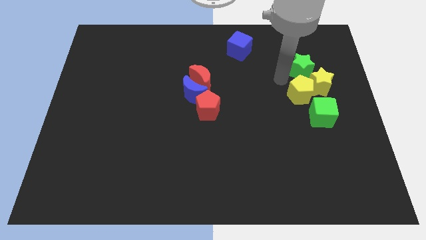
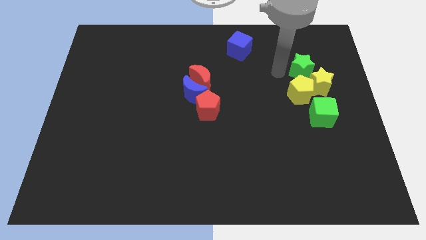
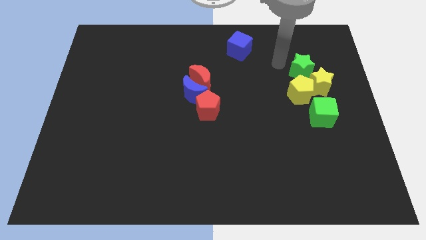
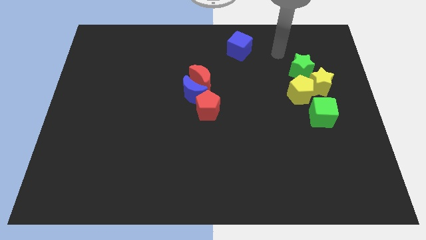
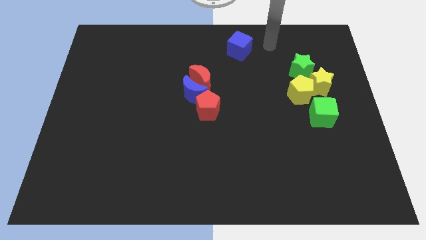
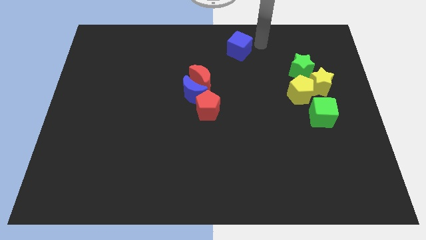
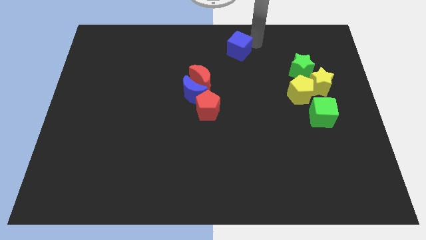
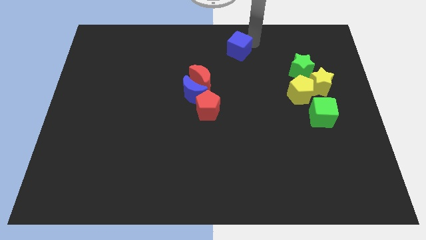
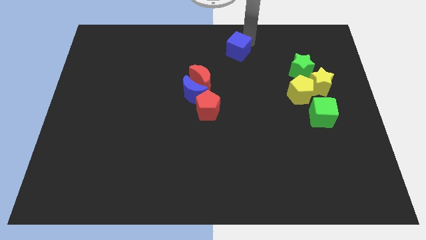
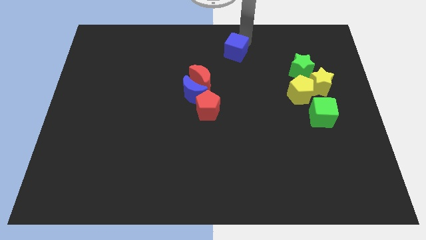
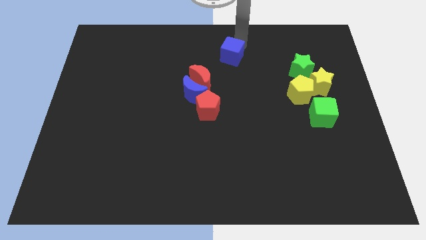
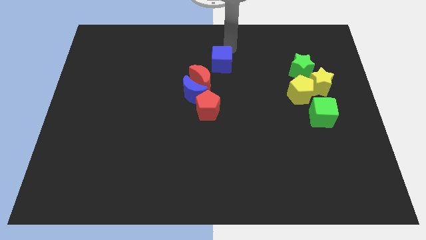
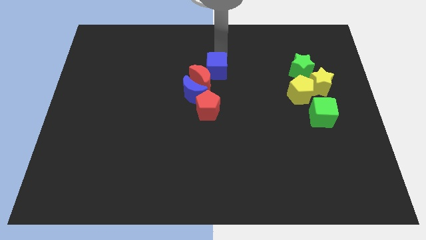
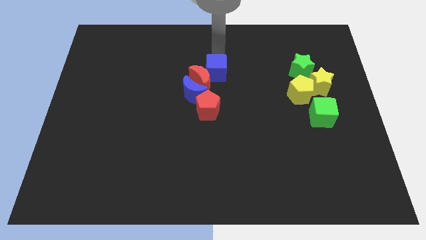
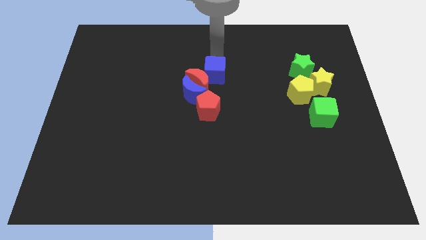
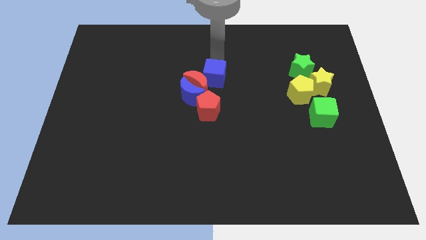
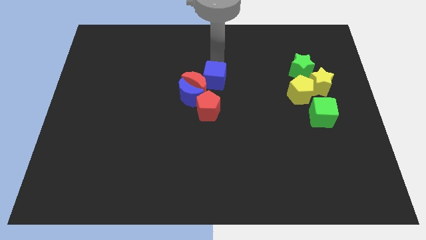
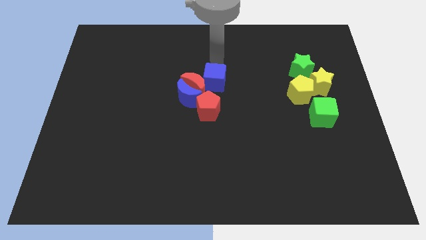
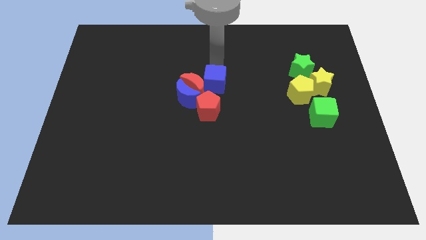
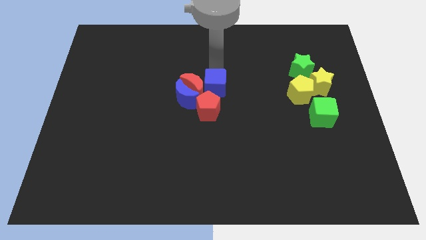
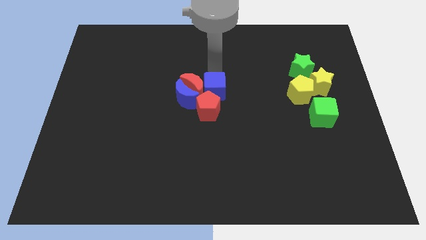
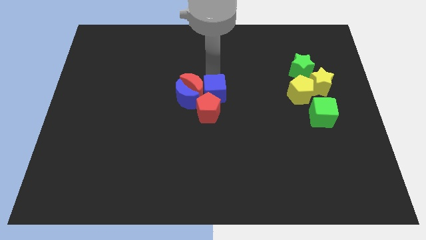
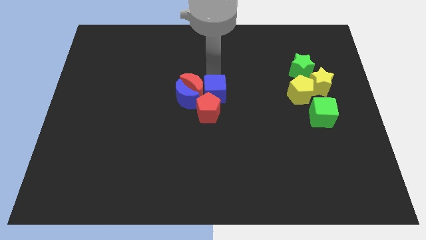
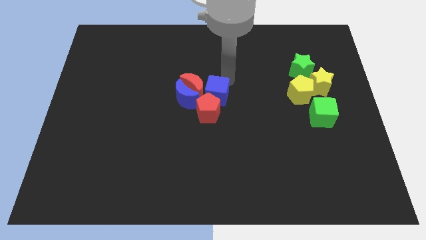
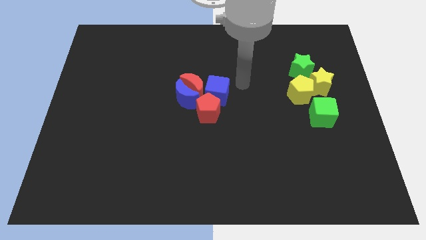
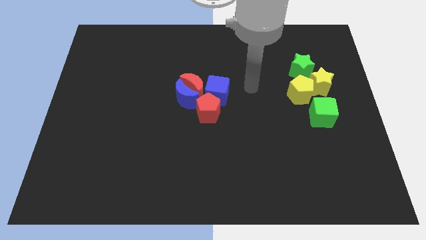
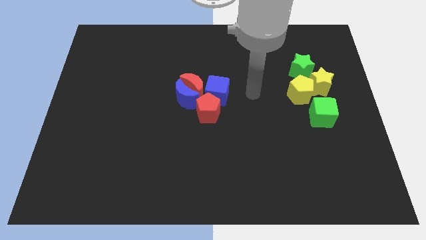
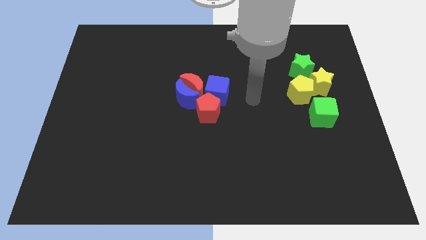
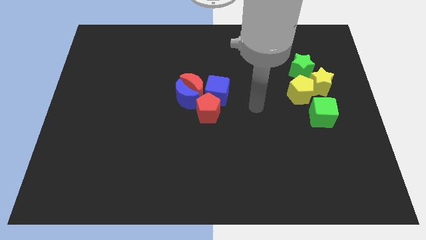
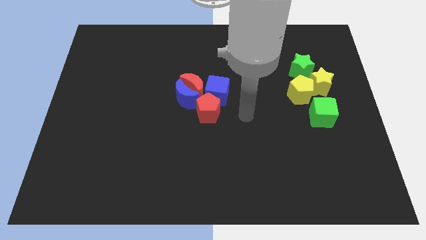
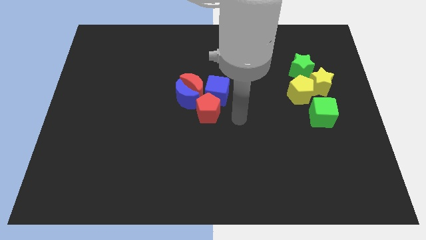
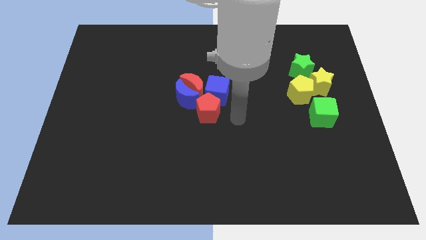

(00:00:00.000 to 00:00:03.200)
move the blue cube to the right of the red crescent

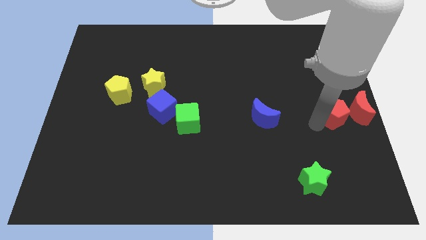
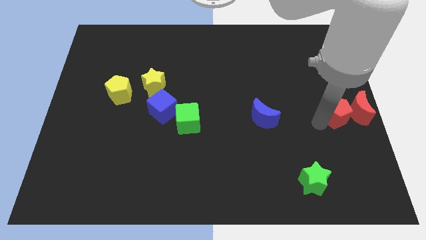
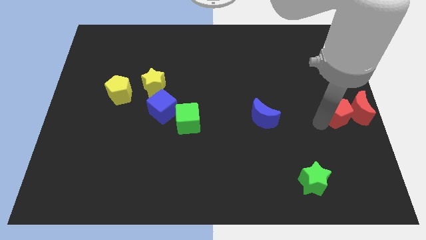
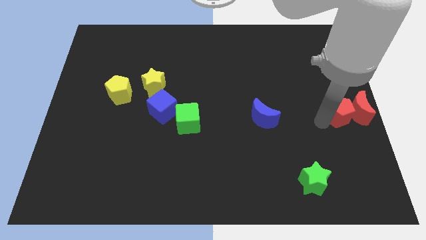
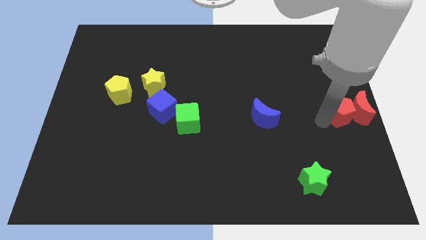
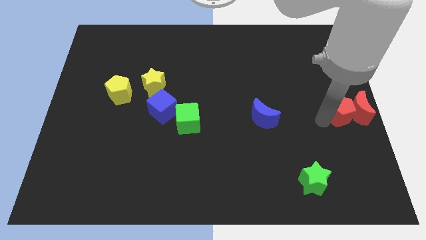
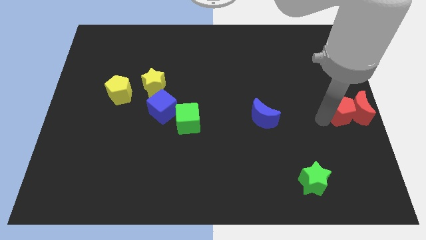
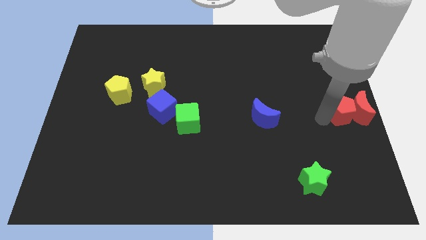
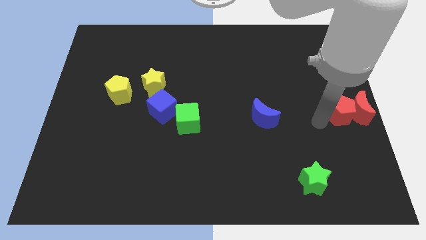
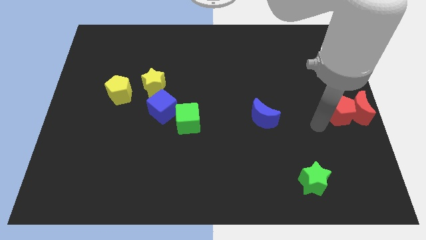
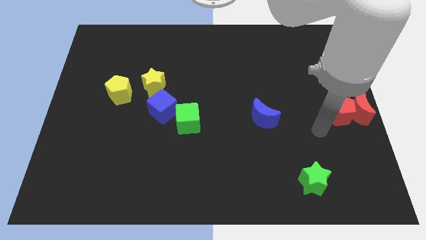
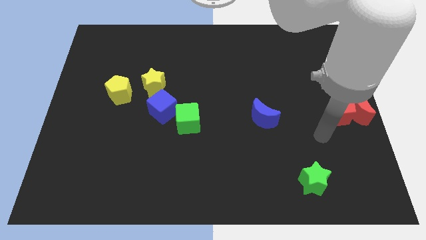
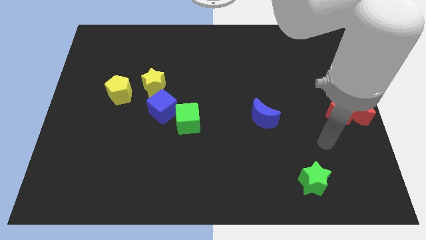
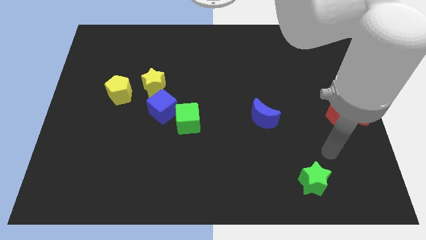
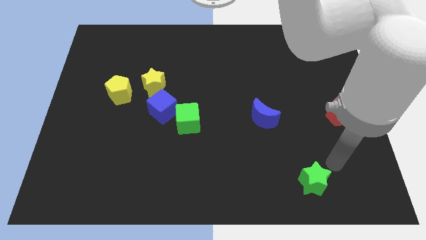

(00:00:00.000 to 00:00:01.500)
move your arm away form red pentagon

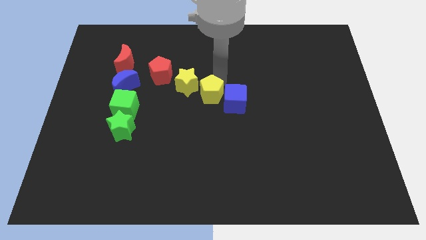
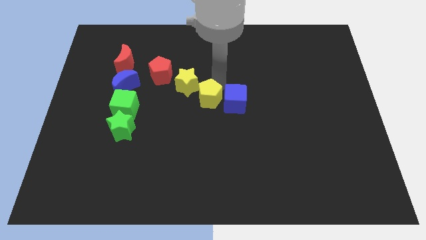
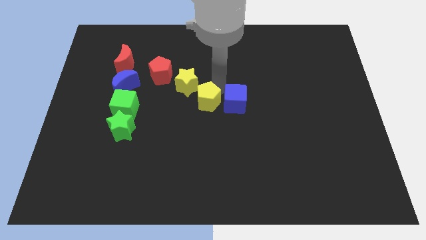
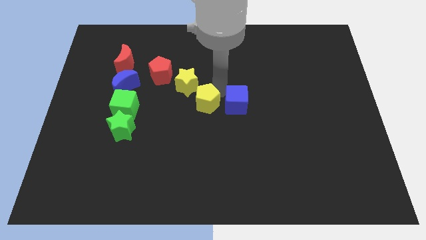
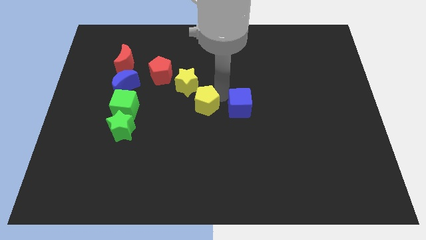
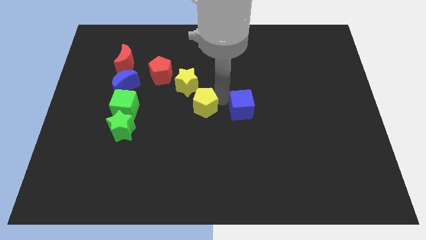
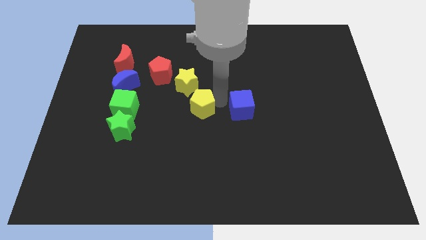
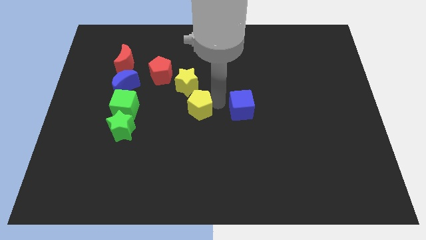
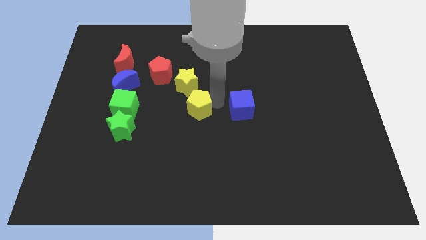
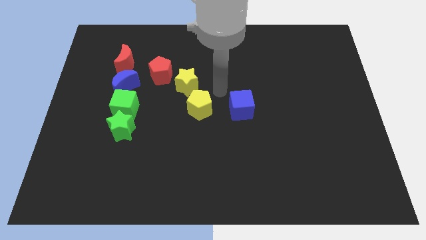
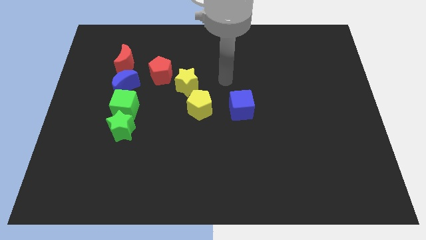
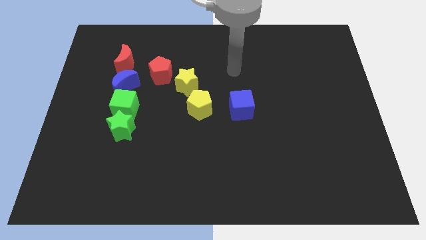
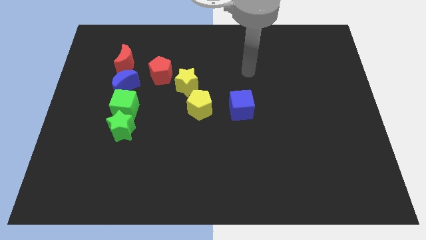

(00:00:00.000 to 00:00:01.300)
separate yellow pentagon from yellow star and blue cube

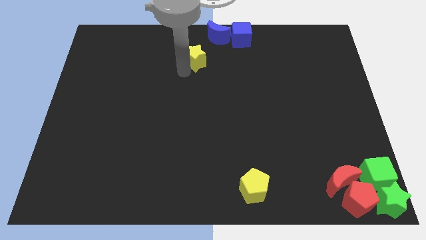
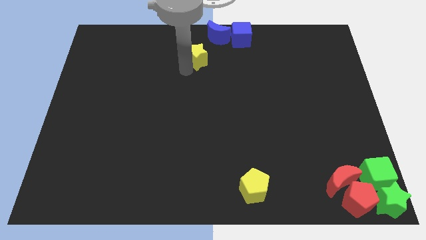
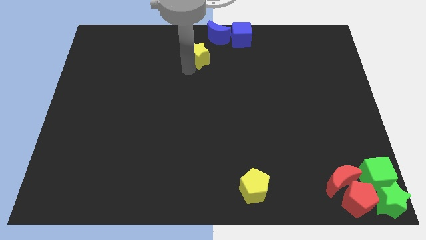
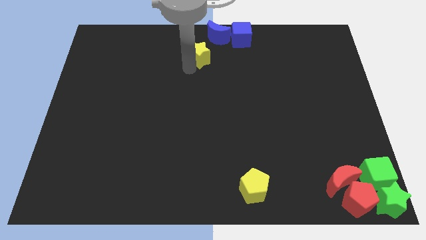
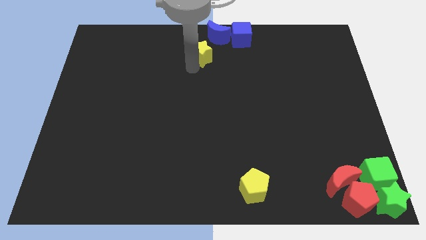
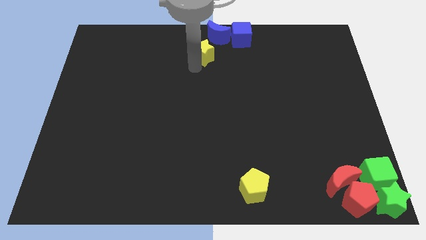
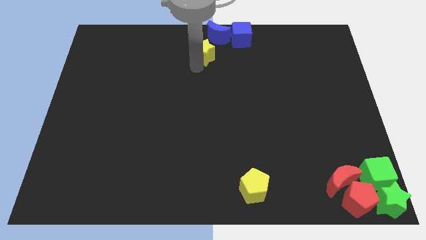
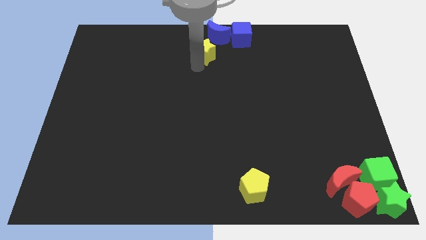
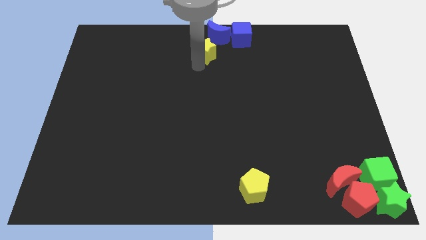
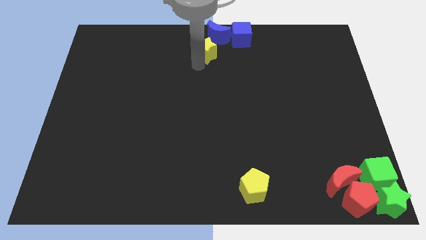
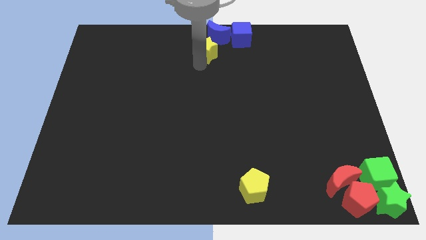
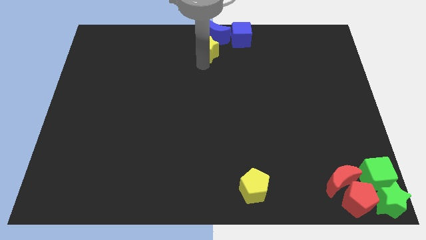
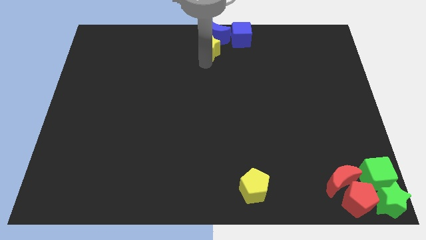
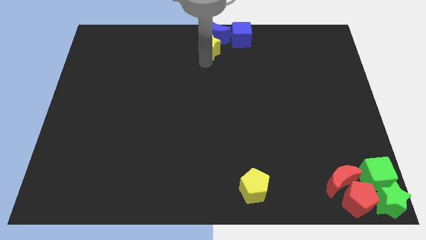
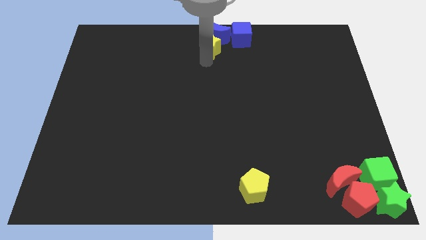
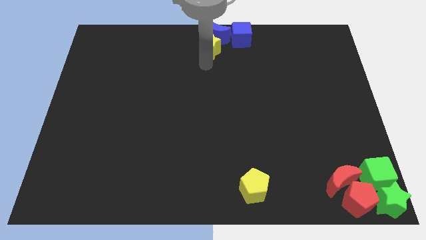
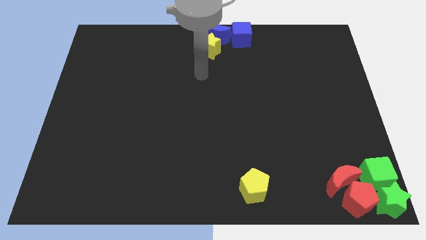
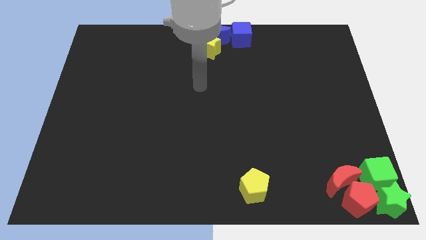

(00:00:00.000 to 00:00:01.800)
move the yellow star to the bottom of the blue crescent

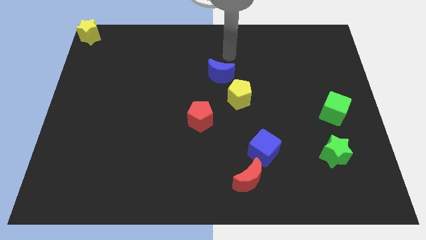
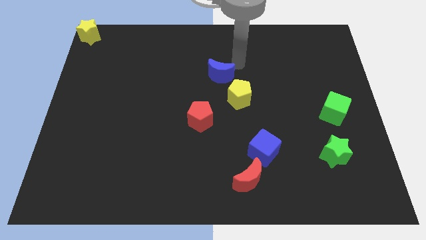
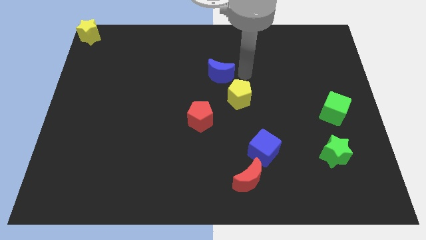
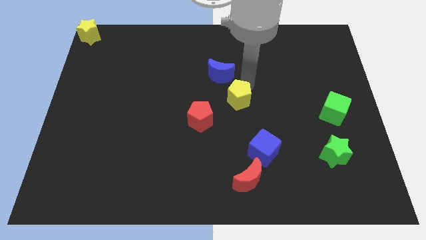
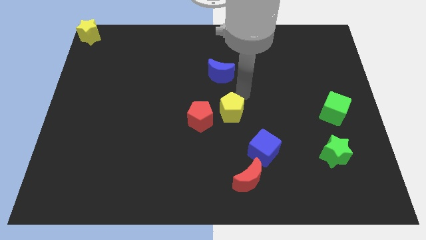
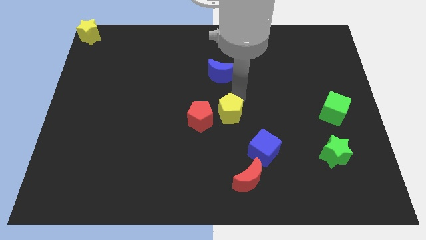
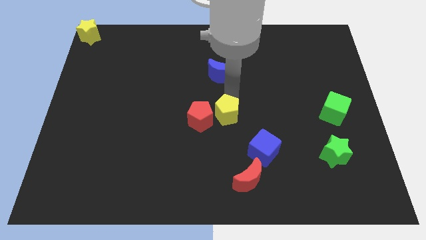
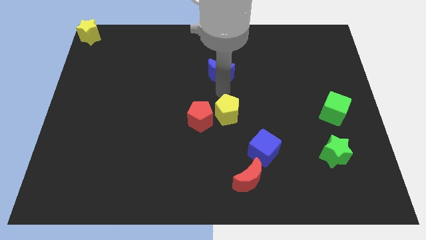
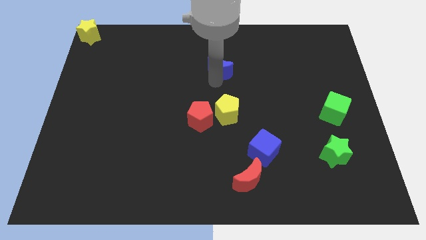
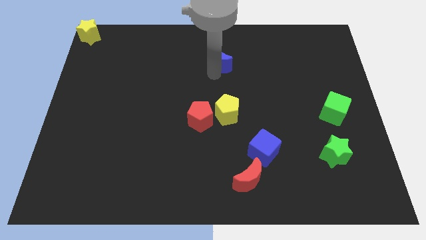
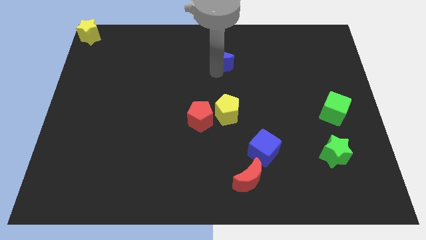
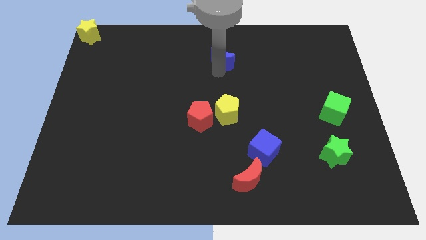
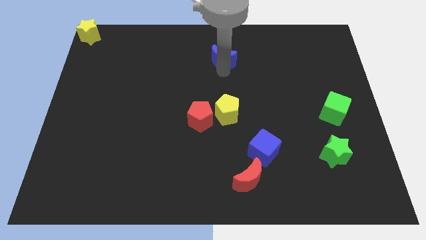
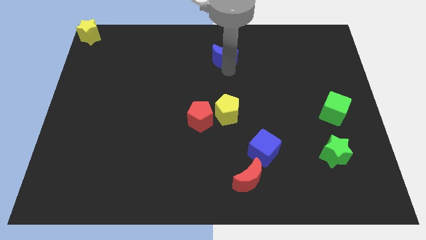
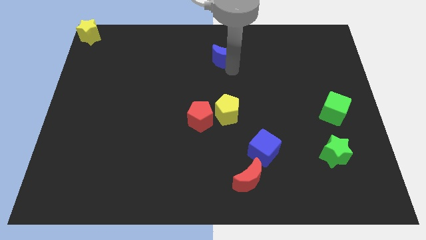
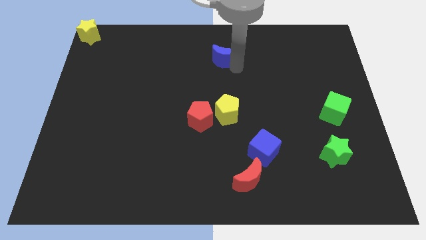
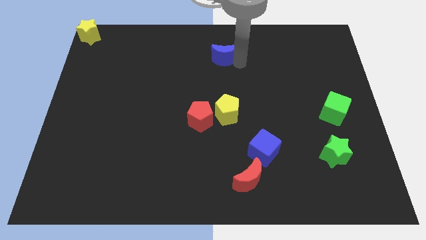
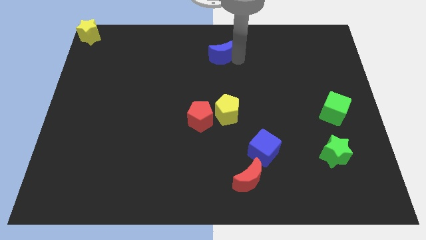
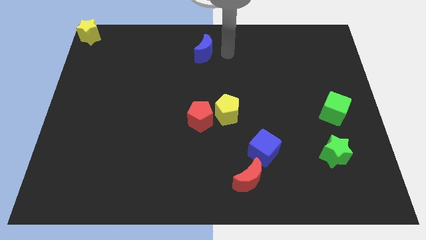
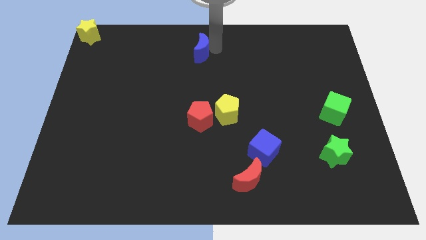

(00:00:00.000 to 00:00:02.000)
move the yellow pentagon to the right of the red pentagon
